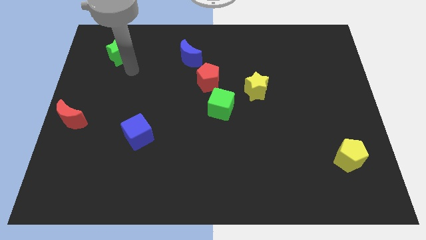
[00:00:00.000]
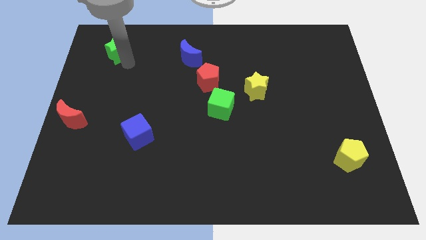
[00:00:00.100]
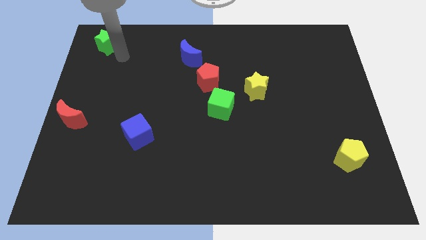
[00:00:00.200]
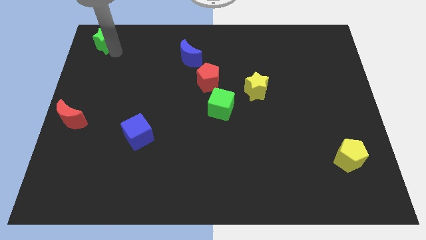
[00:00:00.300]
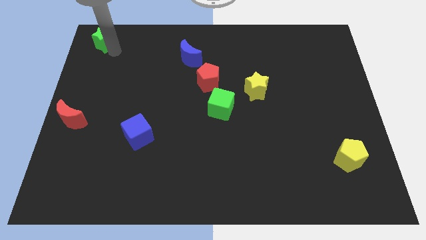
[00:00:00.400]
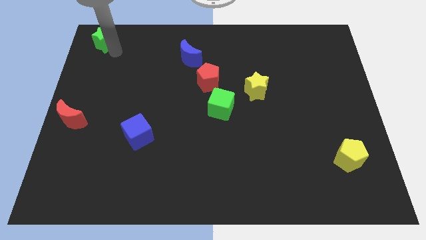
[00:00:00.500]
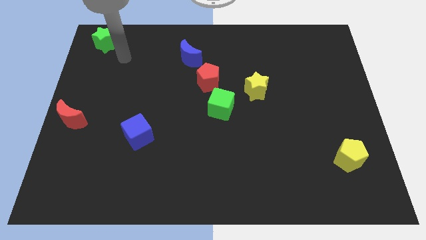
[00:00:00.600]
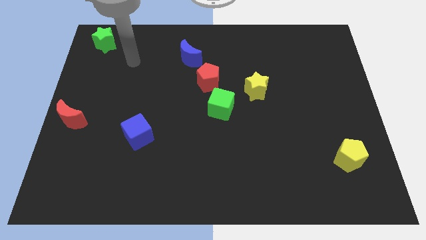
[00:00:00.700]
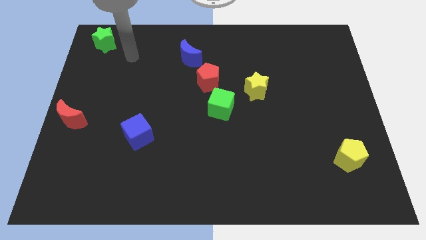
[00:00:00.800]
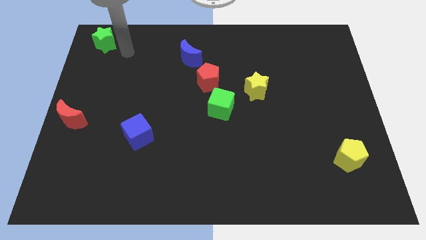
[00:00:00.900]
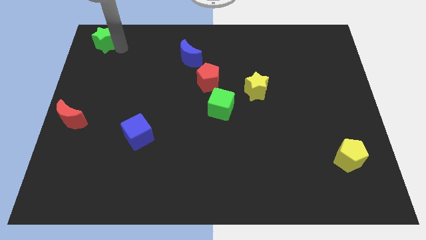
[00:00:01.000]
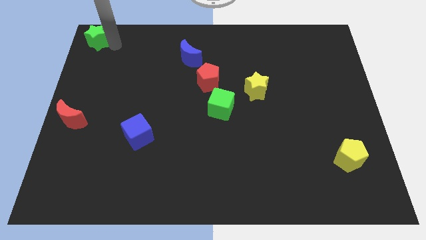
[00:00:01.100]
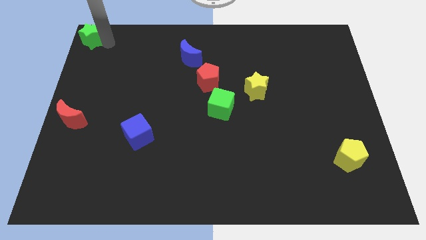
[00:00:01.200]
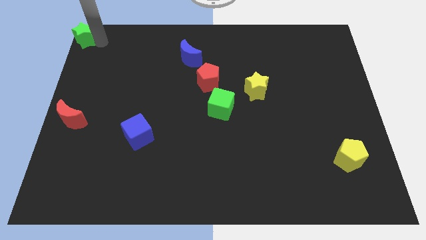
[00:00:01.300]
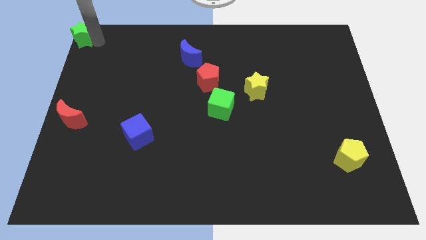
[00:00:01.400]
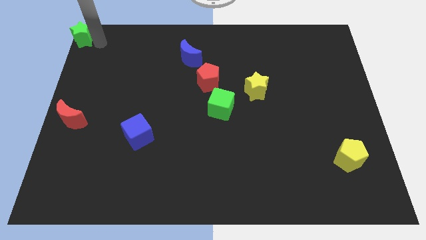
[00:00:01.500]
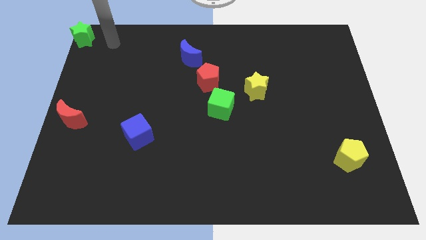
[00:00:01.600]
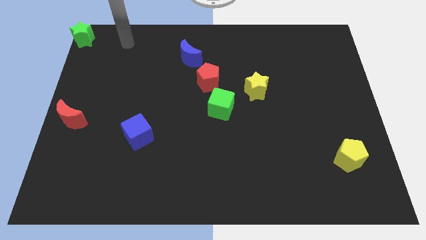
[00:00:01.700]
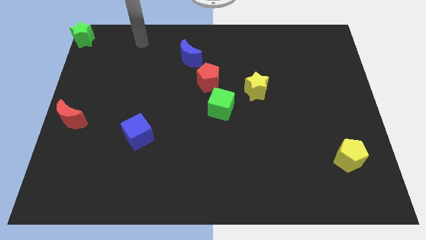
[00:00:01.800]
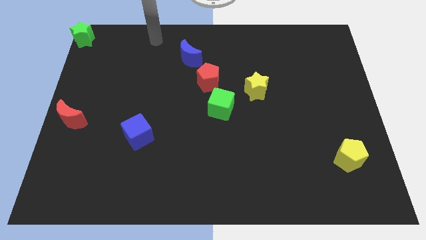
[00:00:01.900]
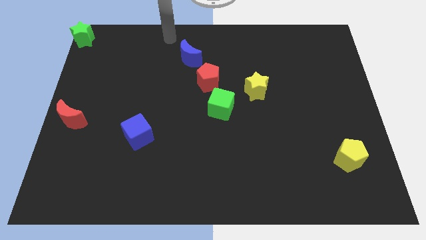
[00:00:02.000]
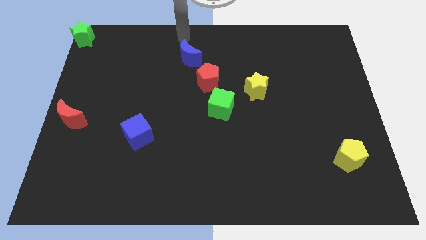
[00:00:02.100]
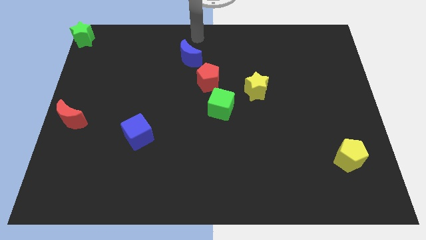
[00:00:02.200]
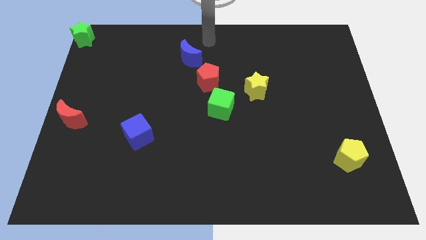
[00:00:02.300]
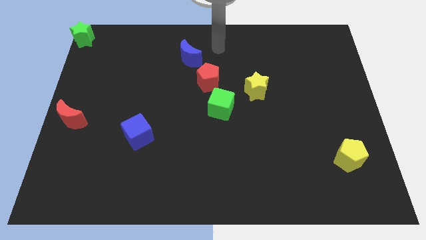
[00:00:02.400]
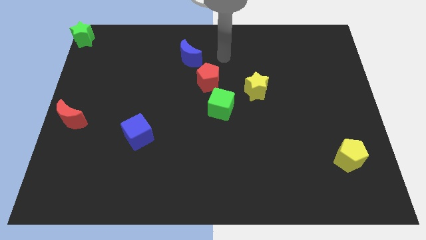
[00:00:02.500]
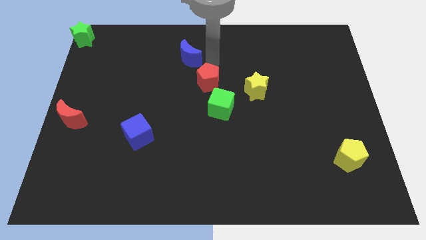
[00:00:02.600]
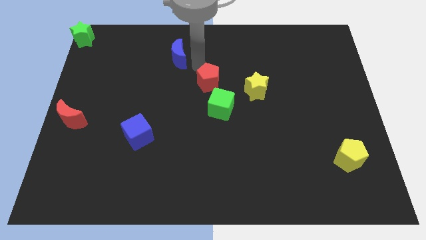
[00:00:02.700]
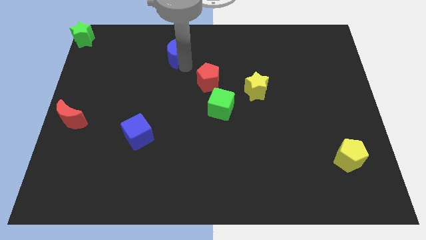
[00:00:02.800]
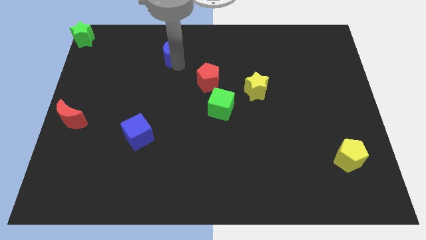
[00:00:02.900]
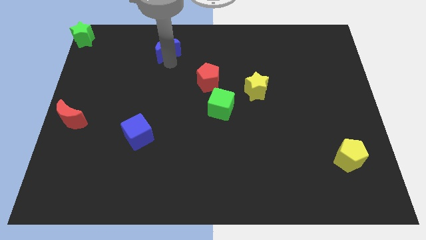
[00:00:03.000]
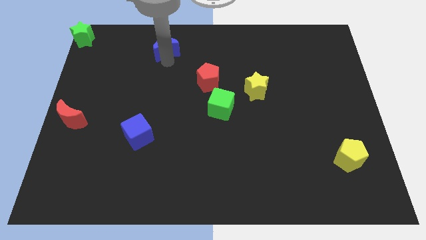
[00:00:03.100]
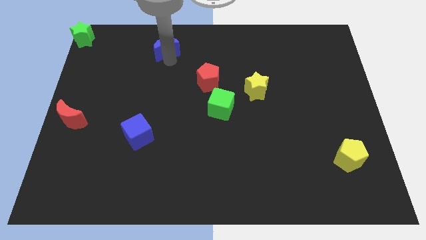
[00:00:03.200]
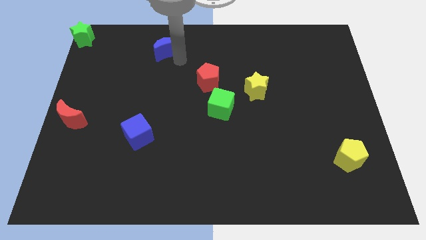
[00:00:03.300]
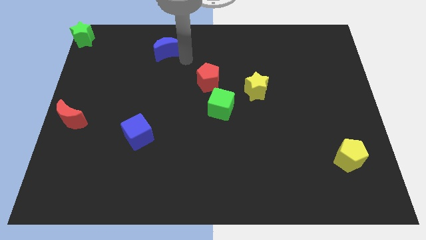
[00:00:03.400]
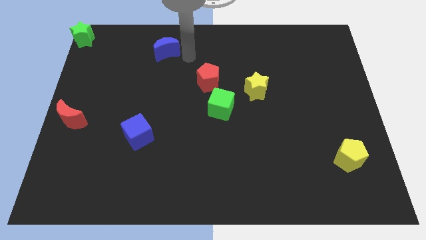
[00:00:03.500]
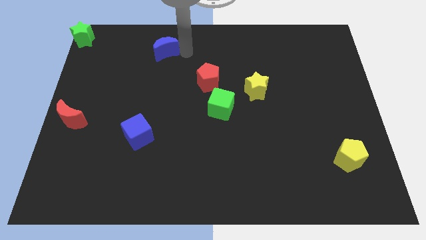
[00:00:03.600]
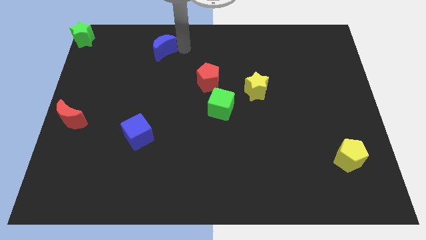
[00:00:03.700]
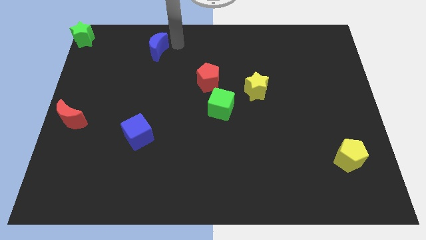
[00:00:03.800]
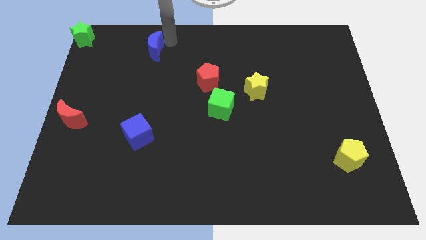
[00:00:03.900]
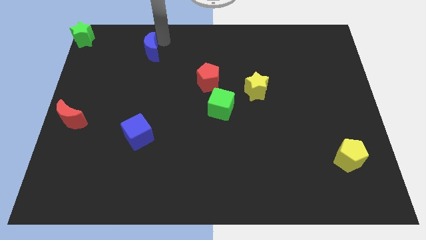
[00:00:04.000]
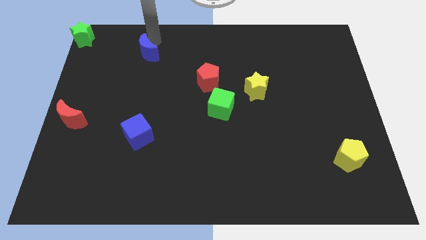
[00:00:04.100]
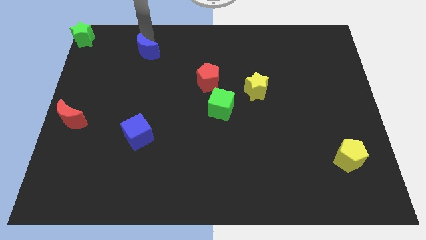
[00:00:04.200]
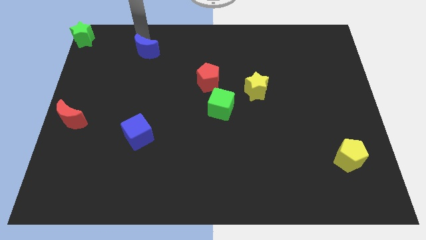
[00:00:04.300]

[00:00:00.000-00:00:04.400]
move the green star to the top left corner

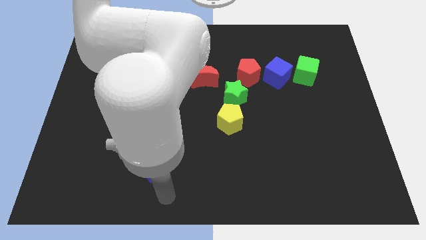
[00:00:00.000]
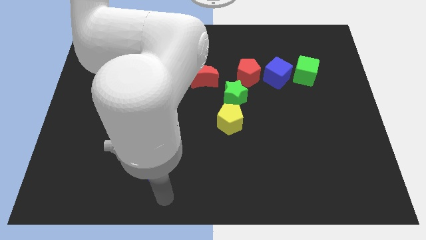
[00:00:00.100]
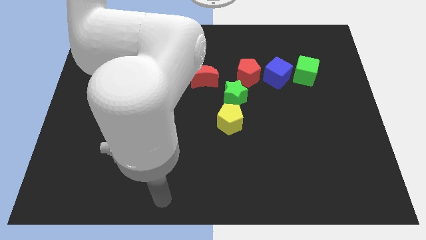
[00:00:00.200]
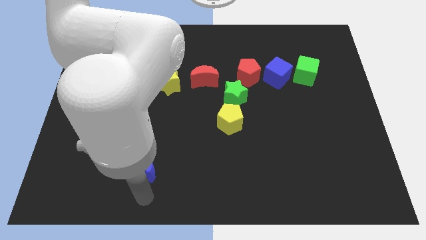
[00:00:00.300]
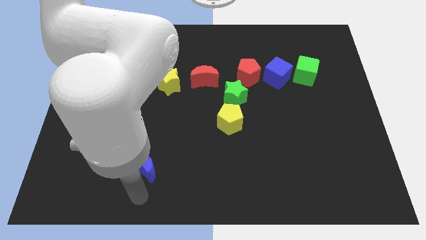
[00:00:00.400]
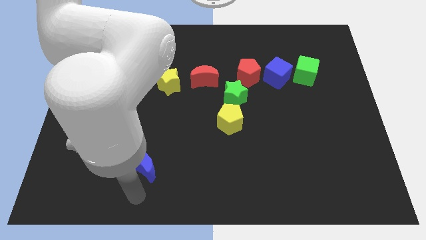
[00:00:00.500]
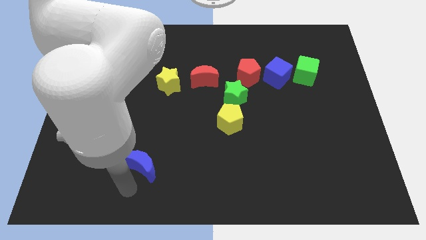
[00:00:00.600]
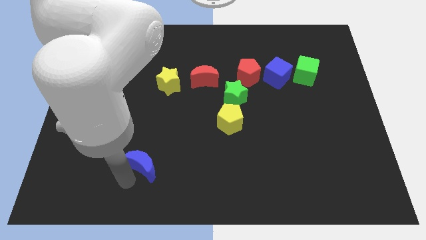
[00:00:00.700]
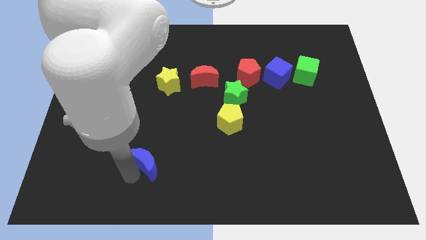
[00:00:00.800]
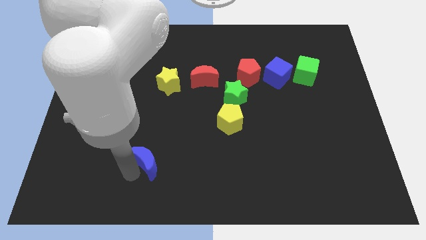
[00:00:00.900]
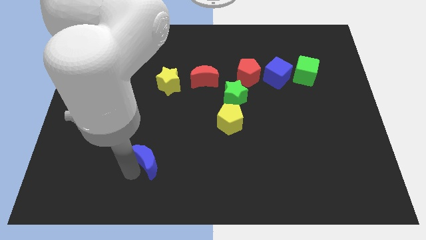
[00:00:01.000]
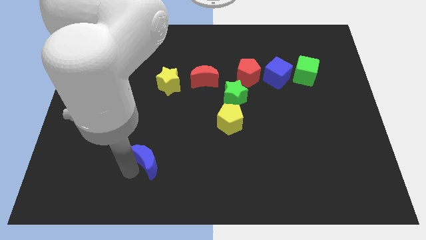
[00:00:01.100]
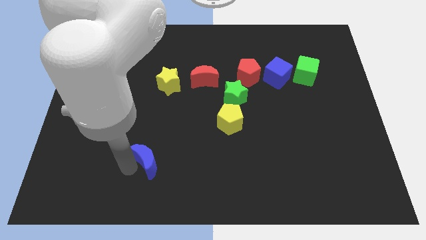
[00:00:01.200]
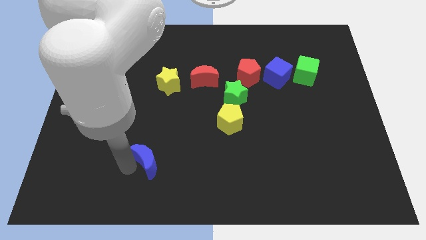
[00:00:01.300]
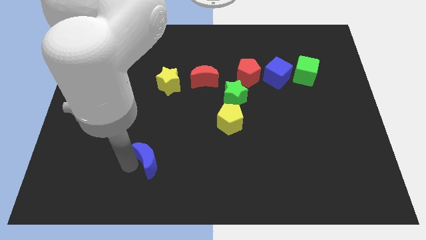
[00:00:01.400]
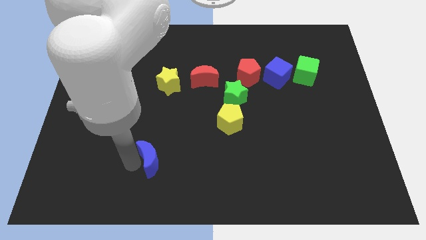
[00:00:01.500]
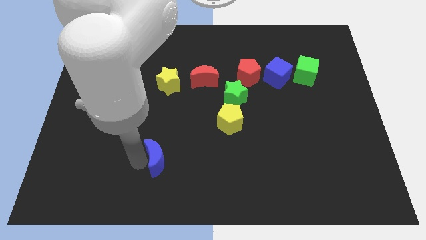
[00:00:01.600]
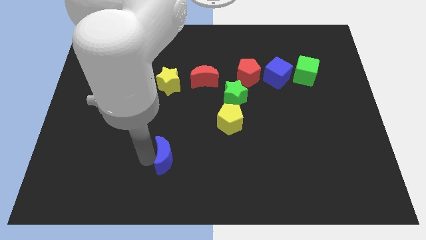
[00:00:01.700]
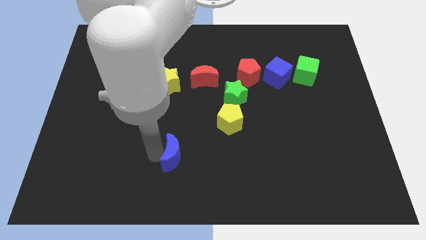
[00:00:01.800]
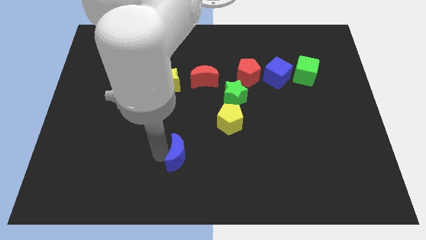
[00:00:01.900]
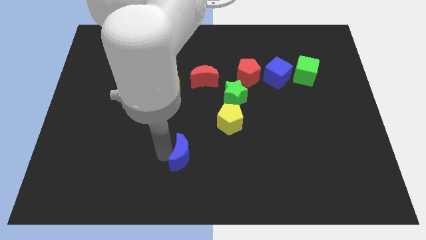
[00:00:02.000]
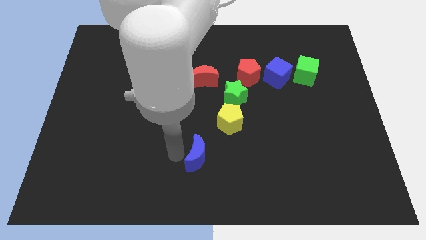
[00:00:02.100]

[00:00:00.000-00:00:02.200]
slightly move the blue crescent to the right side of the board

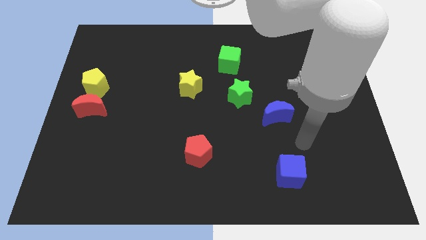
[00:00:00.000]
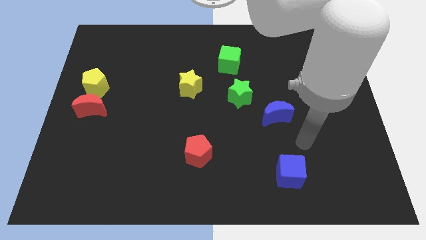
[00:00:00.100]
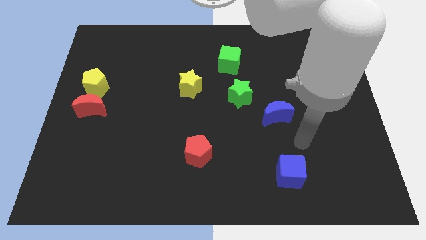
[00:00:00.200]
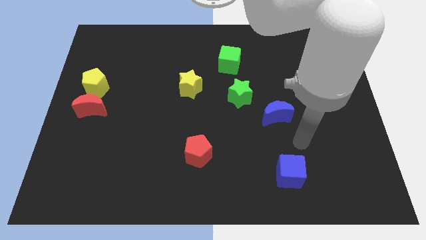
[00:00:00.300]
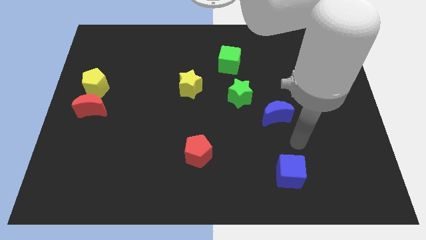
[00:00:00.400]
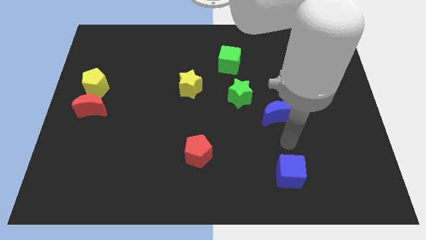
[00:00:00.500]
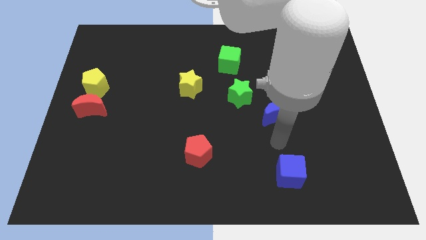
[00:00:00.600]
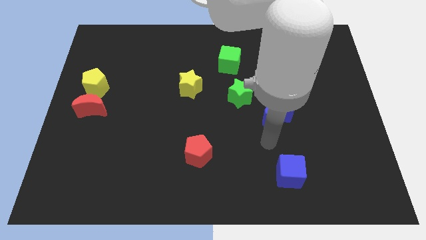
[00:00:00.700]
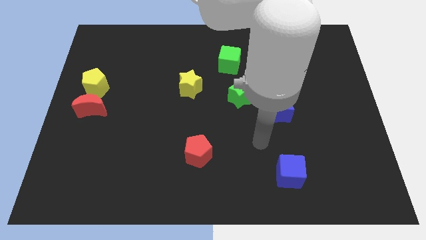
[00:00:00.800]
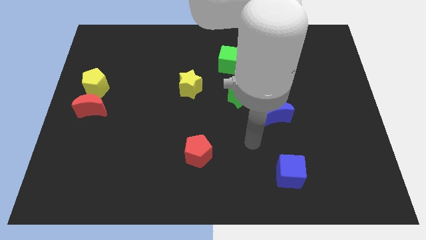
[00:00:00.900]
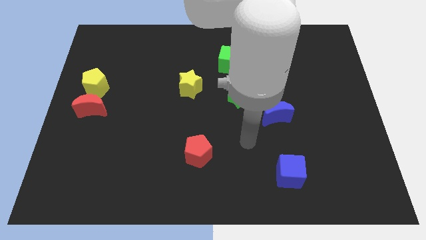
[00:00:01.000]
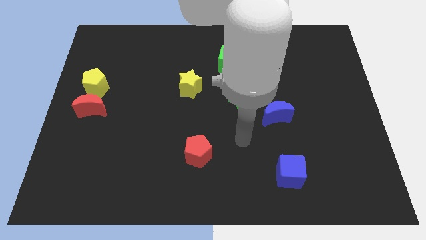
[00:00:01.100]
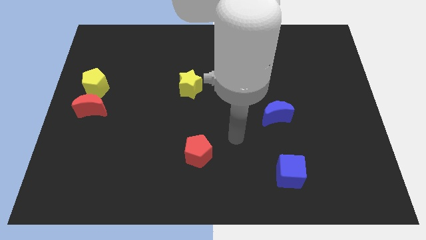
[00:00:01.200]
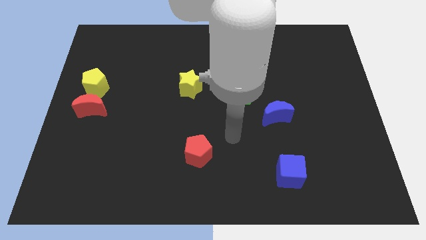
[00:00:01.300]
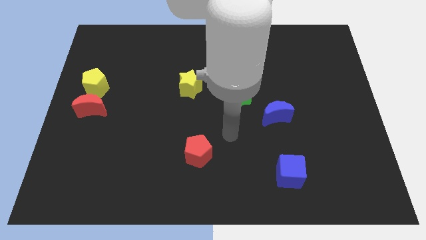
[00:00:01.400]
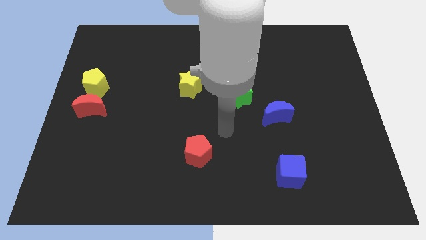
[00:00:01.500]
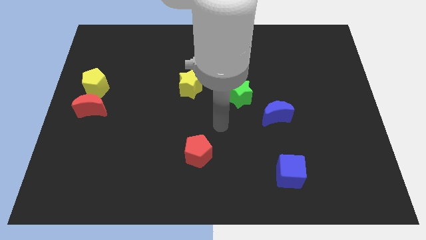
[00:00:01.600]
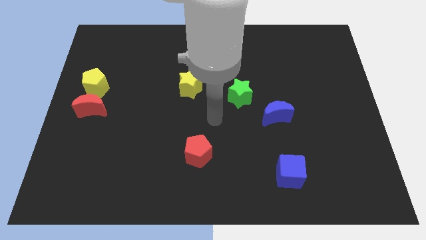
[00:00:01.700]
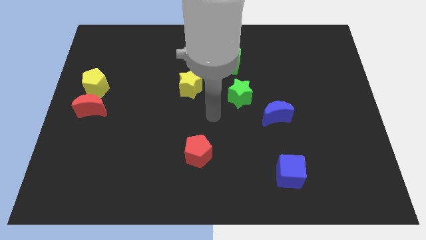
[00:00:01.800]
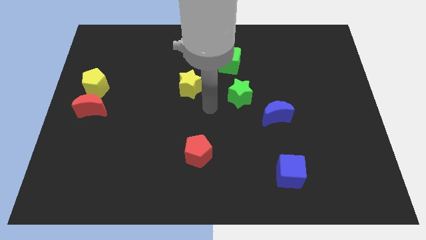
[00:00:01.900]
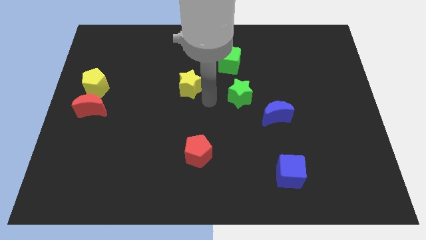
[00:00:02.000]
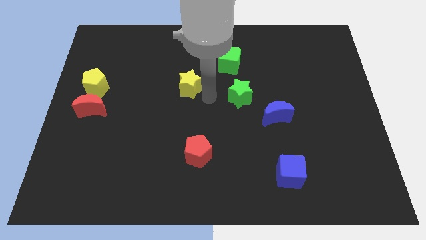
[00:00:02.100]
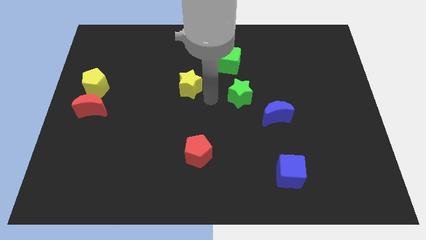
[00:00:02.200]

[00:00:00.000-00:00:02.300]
move your arm close to the yellow star
